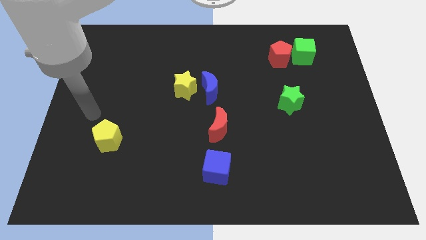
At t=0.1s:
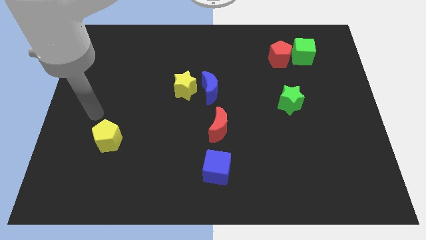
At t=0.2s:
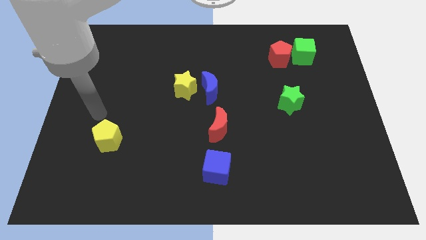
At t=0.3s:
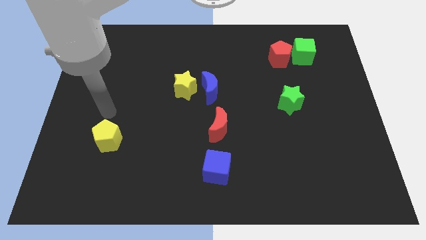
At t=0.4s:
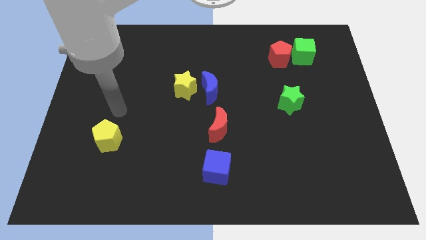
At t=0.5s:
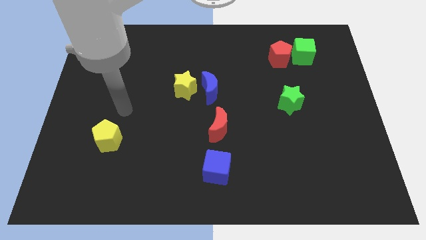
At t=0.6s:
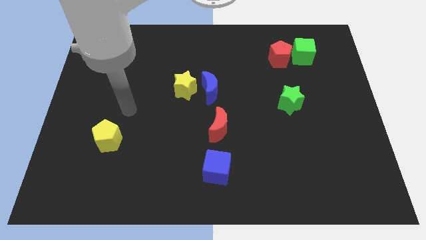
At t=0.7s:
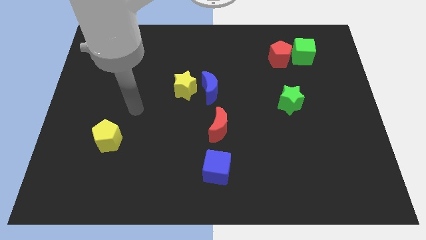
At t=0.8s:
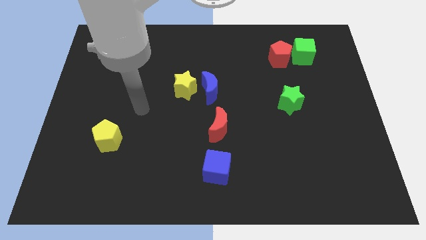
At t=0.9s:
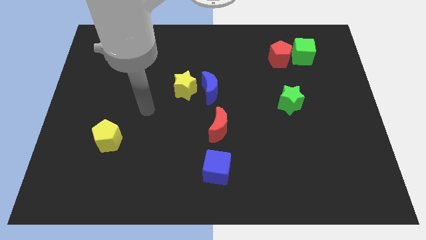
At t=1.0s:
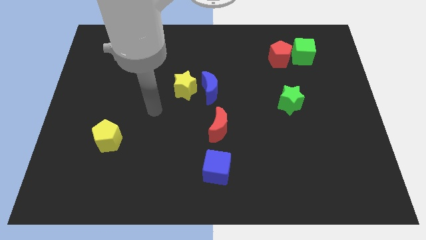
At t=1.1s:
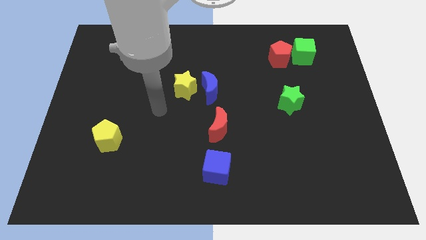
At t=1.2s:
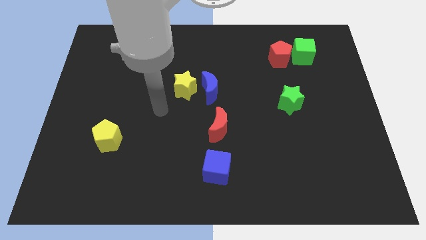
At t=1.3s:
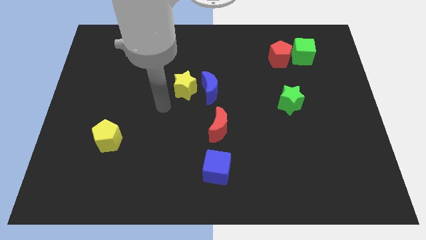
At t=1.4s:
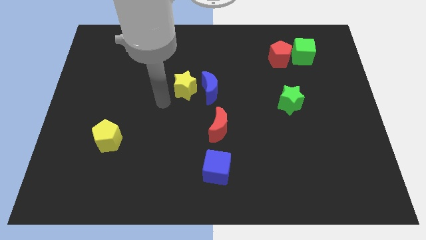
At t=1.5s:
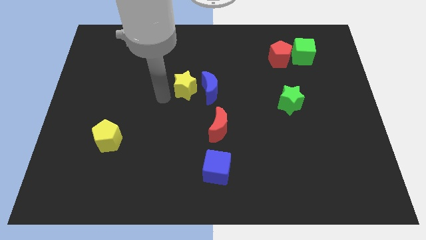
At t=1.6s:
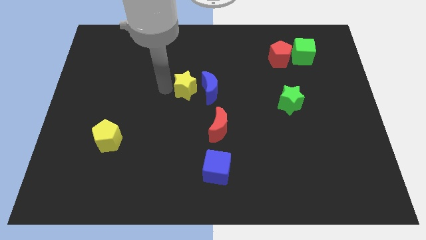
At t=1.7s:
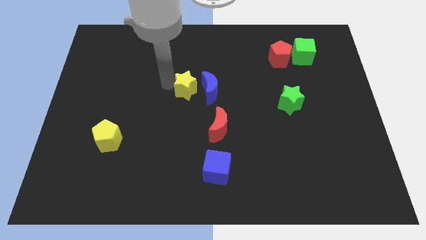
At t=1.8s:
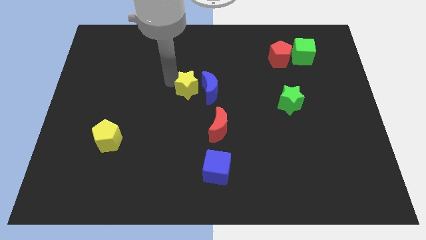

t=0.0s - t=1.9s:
move your arm close to the yellow star

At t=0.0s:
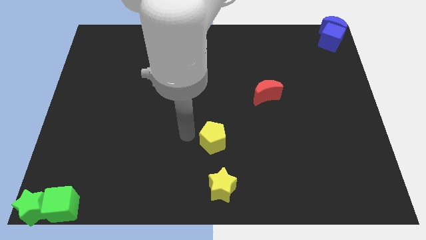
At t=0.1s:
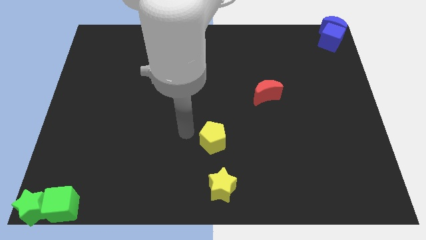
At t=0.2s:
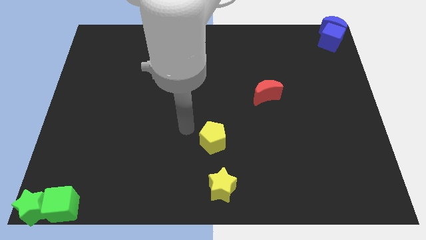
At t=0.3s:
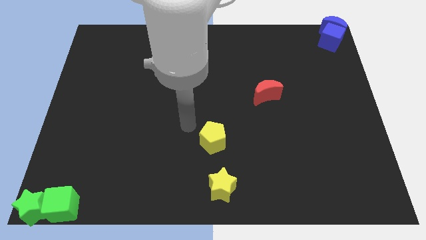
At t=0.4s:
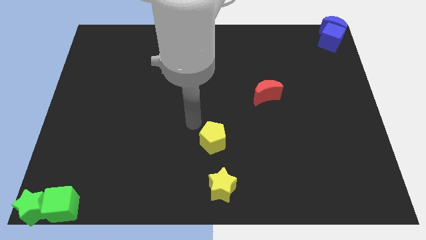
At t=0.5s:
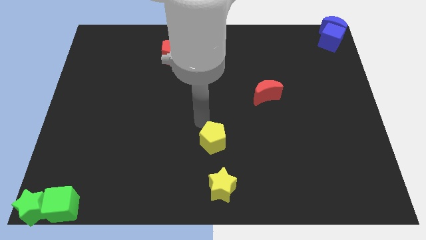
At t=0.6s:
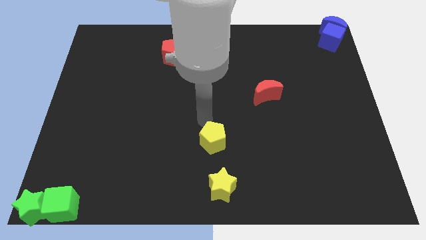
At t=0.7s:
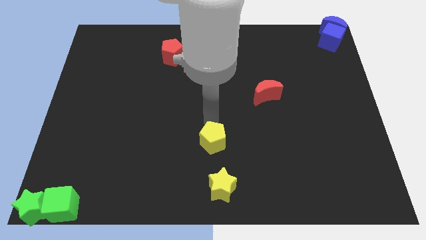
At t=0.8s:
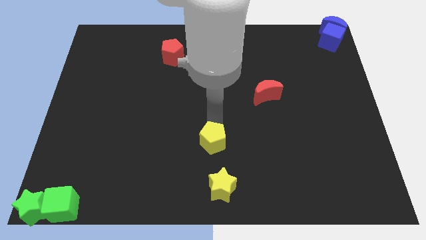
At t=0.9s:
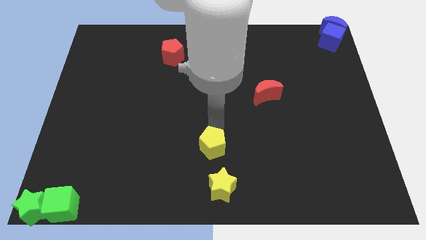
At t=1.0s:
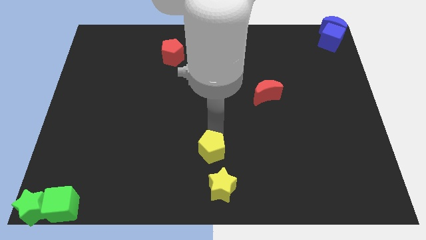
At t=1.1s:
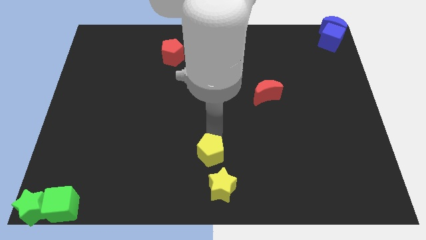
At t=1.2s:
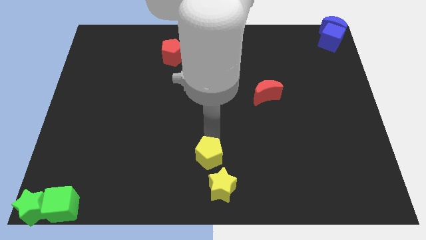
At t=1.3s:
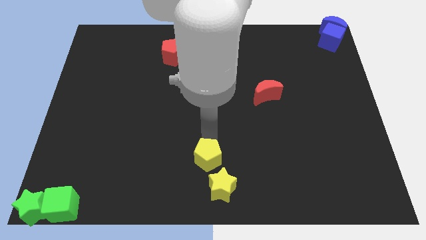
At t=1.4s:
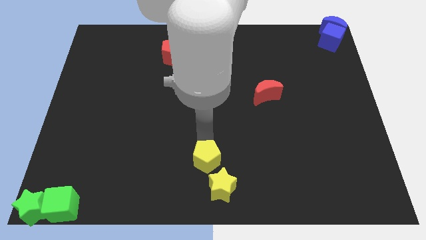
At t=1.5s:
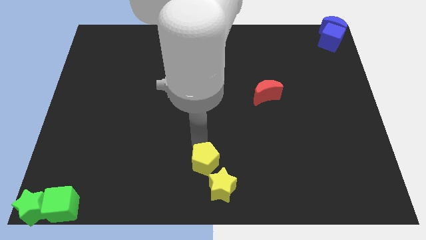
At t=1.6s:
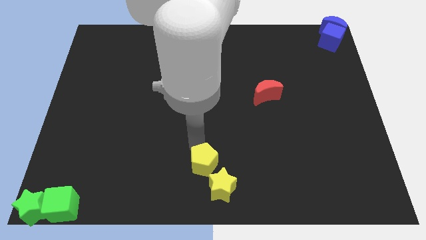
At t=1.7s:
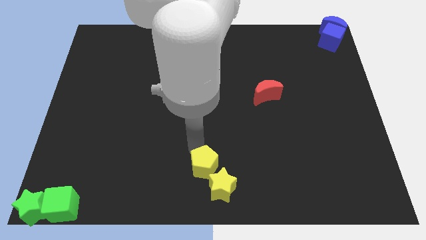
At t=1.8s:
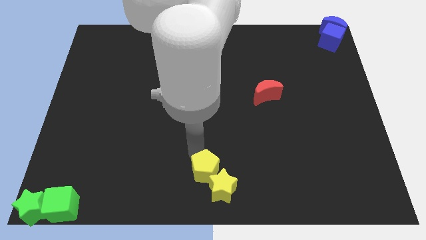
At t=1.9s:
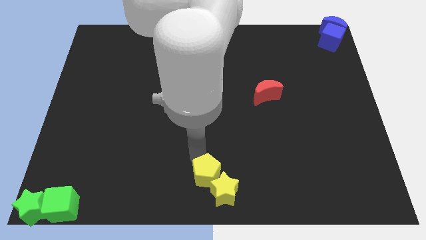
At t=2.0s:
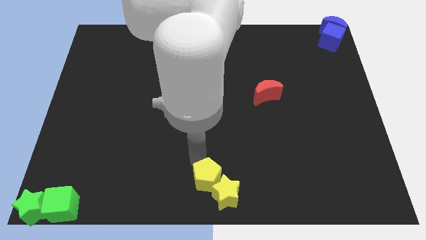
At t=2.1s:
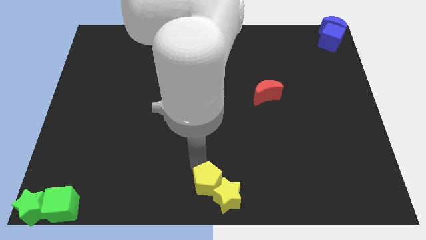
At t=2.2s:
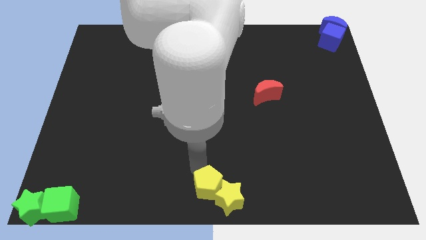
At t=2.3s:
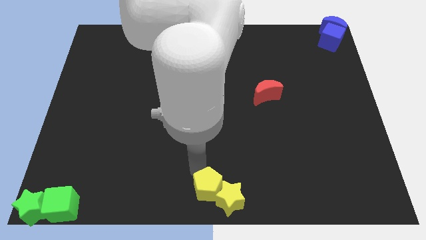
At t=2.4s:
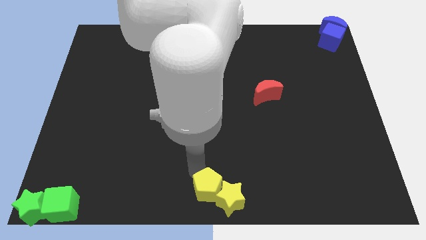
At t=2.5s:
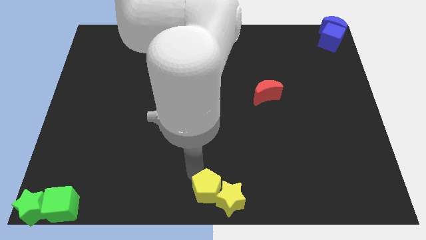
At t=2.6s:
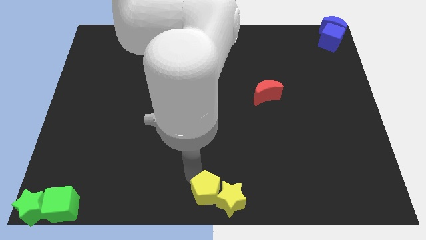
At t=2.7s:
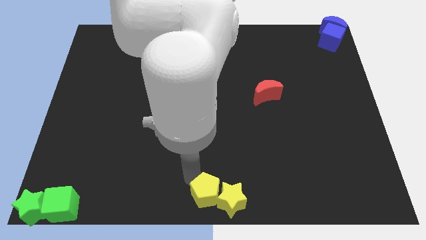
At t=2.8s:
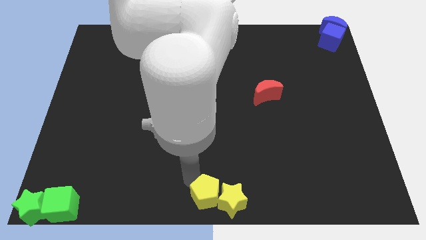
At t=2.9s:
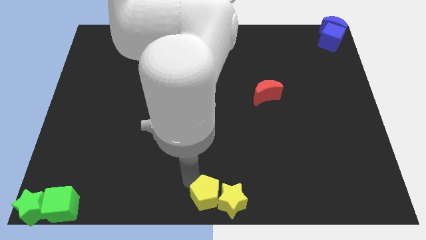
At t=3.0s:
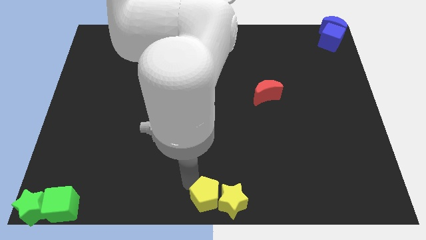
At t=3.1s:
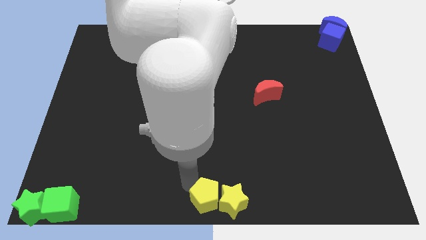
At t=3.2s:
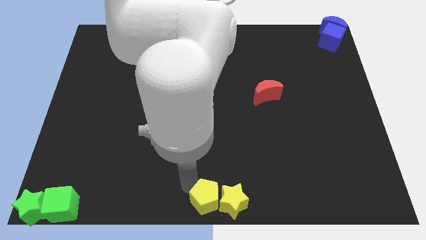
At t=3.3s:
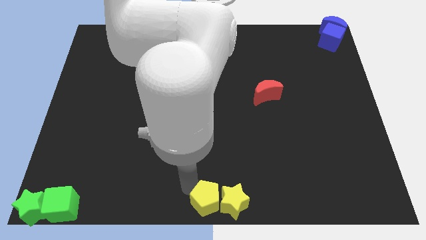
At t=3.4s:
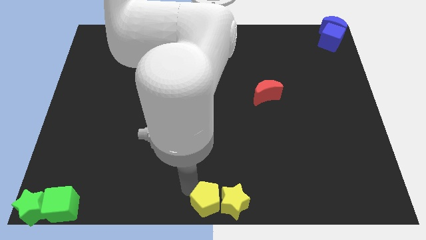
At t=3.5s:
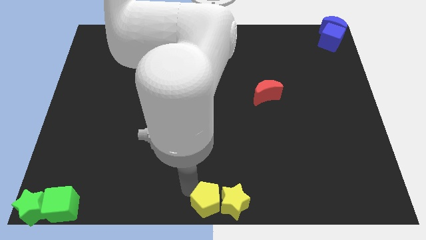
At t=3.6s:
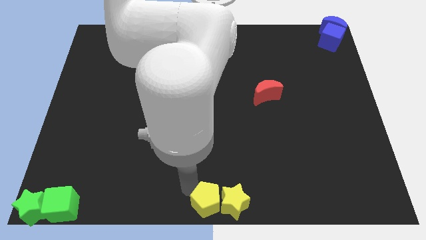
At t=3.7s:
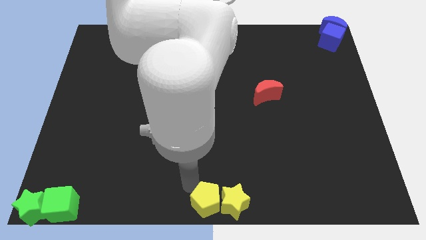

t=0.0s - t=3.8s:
move the yellow blocks towards the bottom center of the board

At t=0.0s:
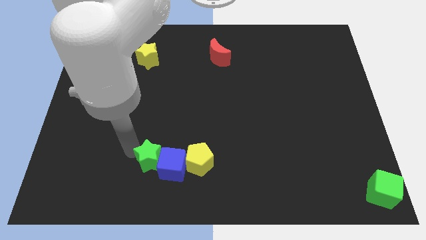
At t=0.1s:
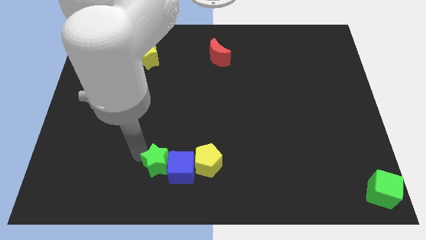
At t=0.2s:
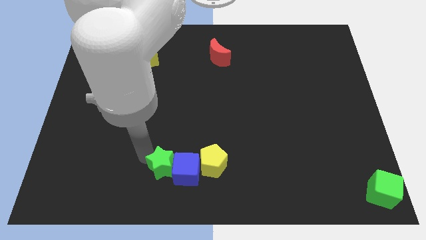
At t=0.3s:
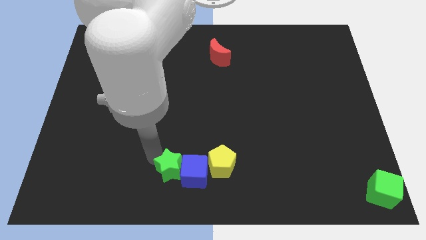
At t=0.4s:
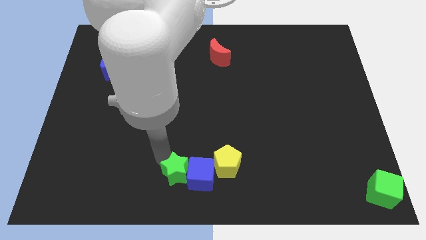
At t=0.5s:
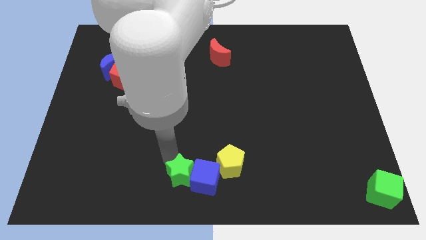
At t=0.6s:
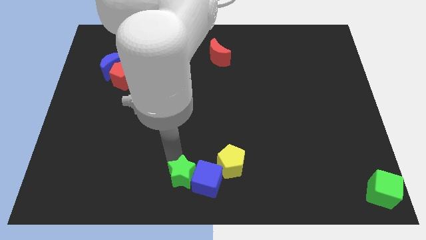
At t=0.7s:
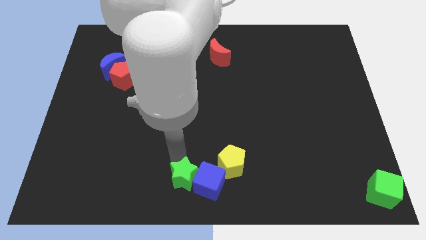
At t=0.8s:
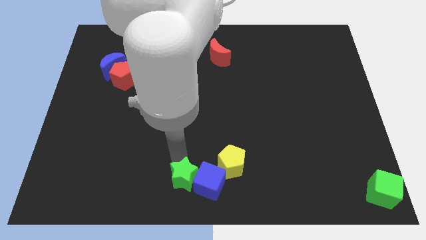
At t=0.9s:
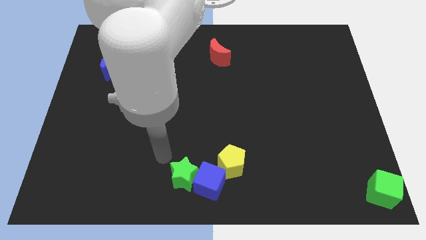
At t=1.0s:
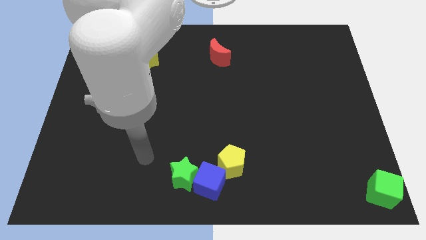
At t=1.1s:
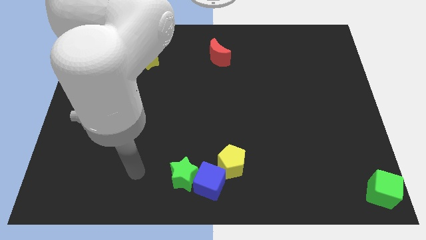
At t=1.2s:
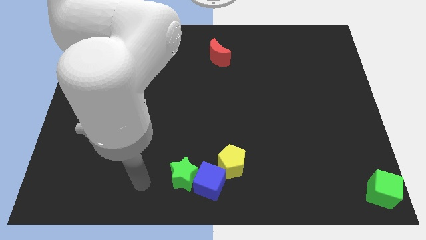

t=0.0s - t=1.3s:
move the green star and blue cube to the right side

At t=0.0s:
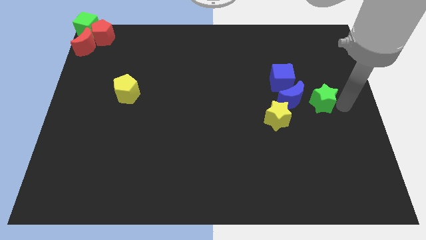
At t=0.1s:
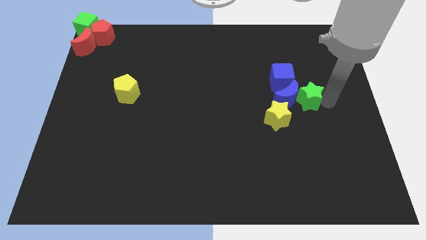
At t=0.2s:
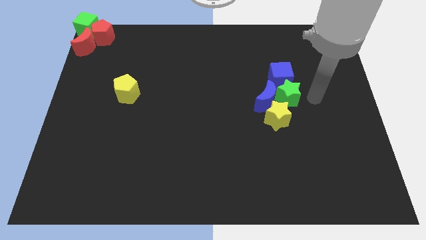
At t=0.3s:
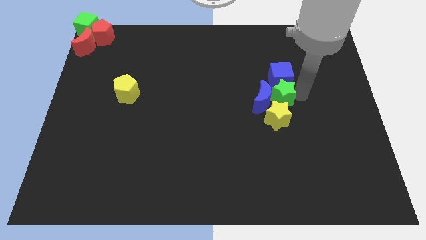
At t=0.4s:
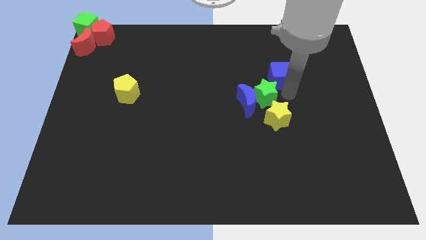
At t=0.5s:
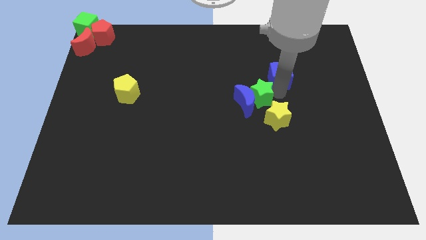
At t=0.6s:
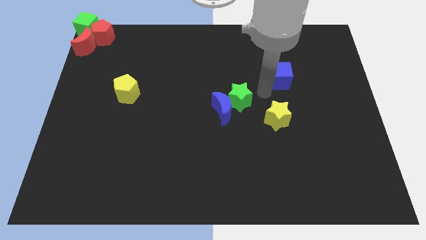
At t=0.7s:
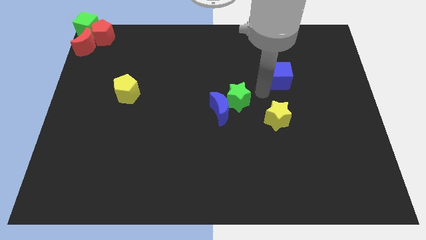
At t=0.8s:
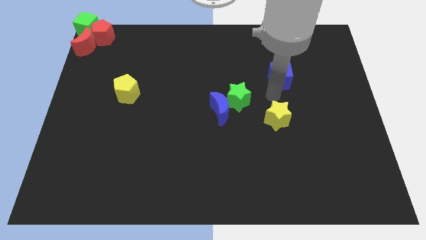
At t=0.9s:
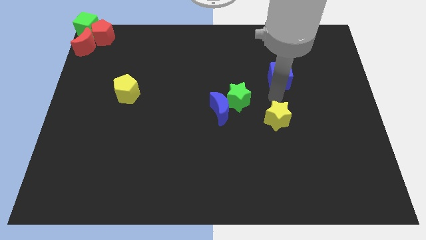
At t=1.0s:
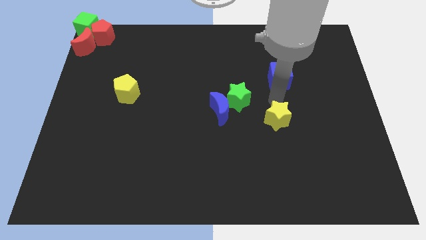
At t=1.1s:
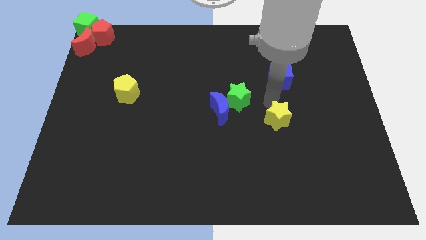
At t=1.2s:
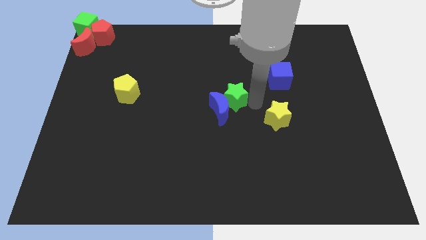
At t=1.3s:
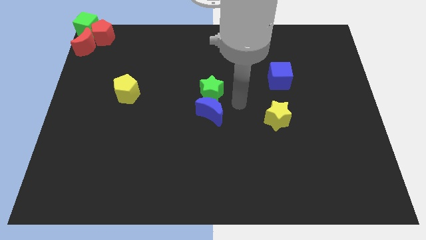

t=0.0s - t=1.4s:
move the green star to the center

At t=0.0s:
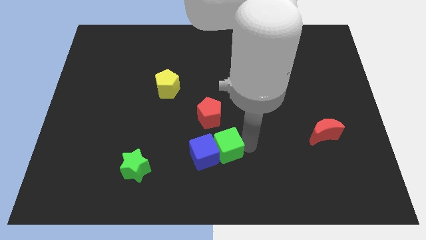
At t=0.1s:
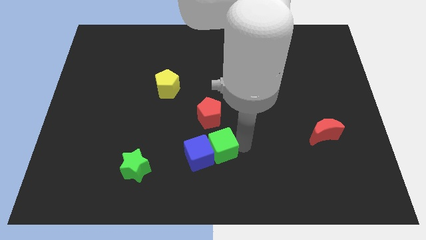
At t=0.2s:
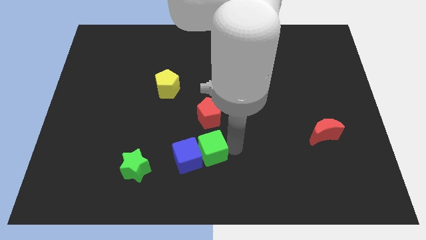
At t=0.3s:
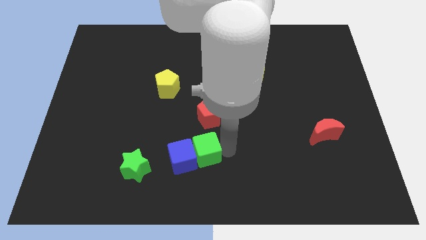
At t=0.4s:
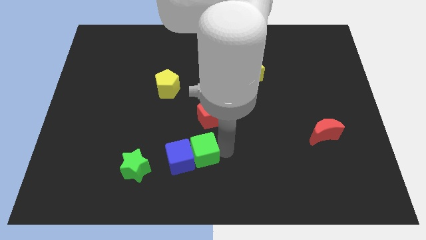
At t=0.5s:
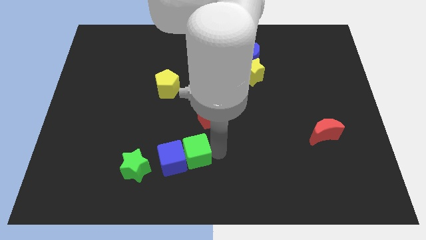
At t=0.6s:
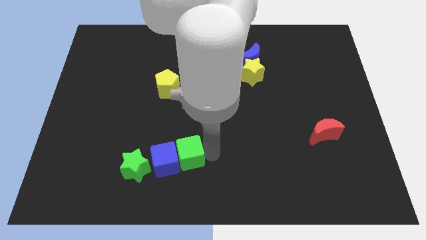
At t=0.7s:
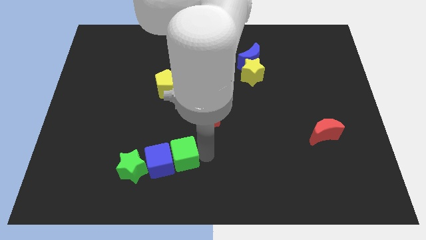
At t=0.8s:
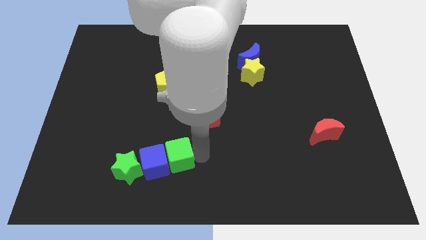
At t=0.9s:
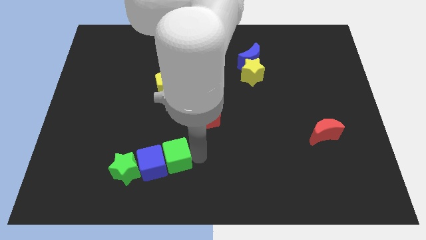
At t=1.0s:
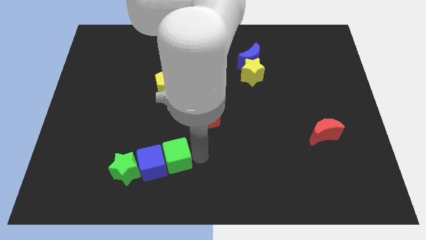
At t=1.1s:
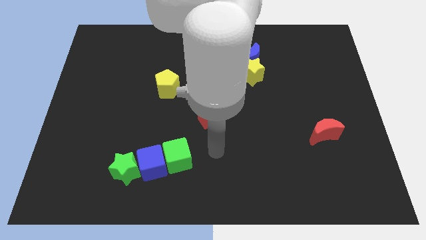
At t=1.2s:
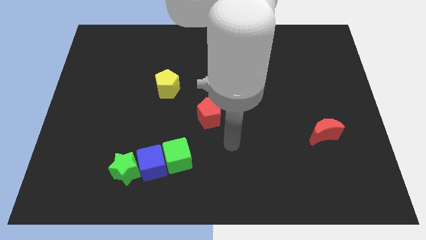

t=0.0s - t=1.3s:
push green and blue cube towards green star
